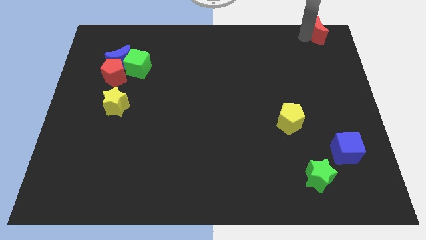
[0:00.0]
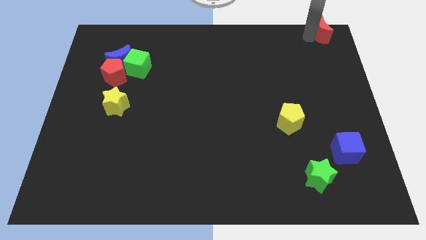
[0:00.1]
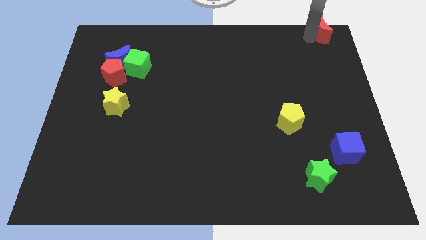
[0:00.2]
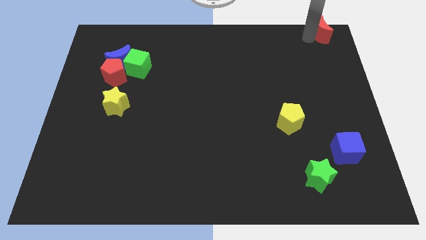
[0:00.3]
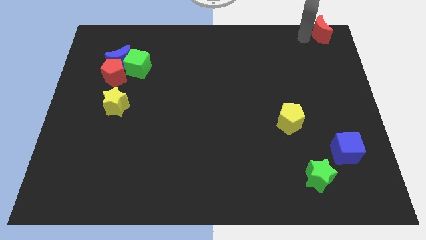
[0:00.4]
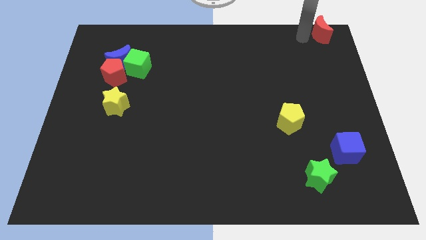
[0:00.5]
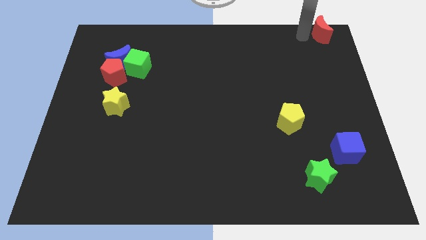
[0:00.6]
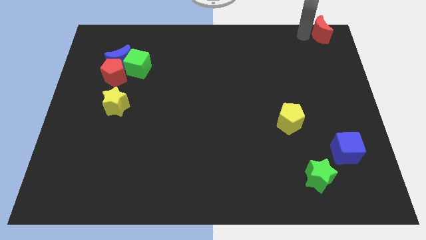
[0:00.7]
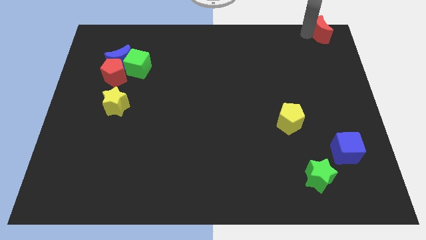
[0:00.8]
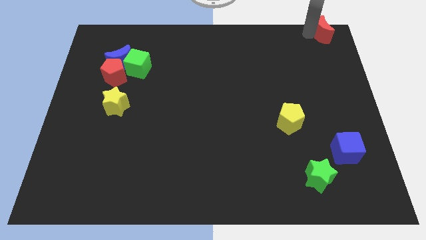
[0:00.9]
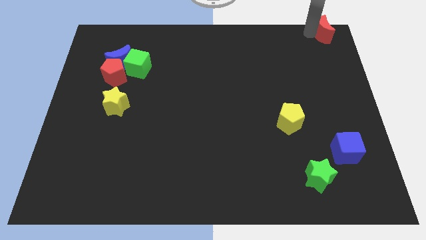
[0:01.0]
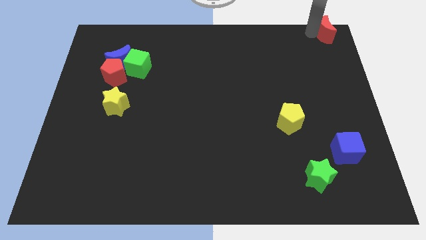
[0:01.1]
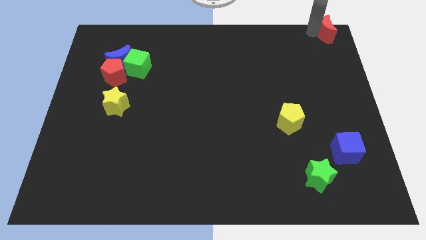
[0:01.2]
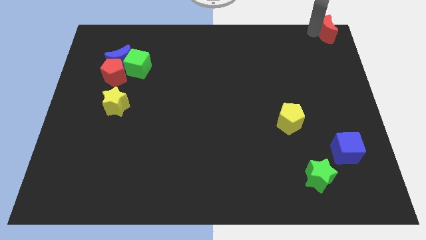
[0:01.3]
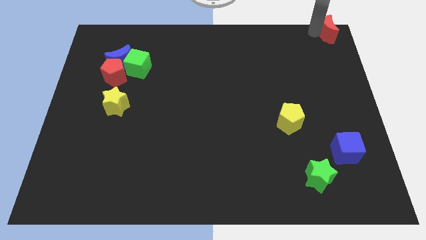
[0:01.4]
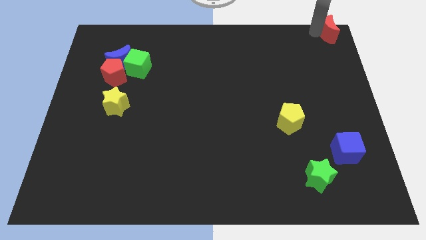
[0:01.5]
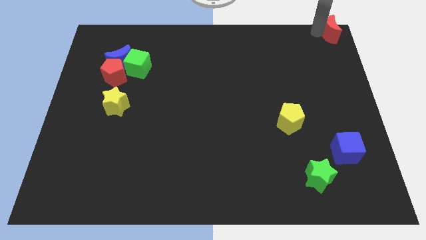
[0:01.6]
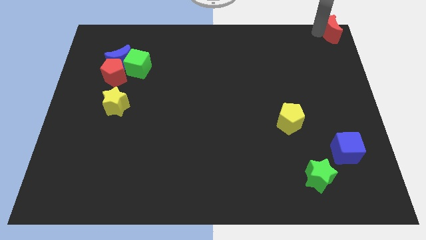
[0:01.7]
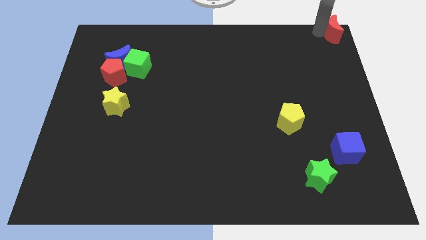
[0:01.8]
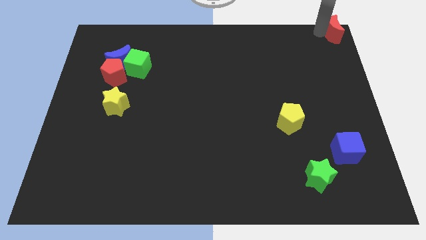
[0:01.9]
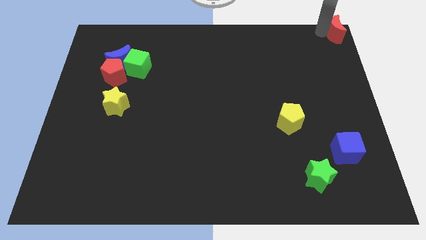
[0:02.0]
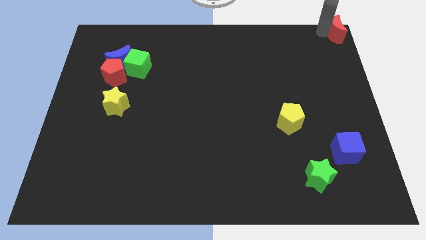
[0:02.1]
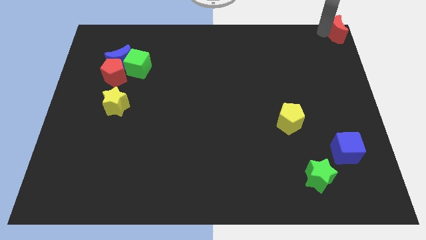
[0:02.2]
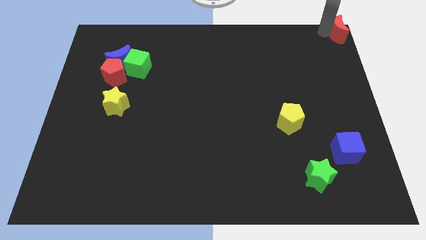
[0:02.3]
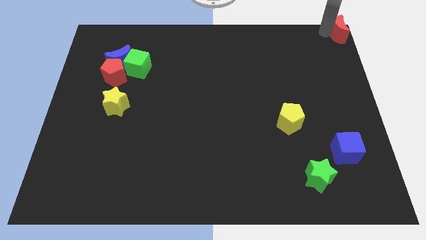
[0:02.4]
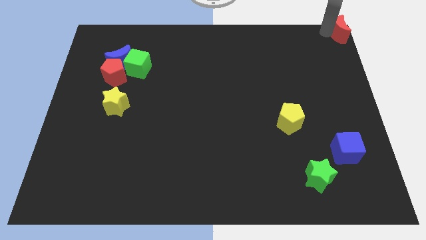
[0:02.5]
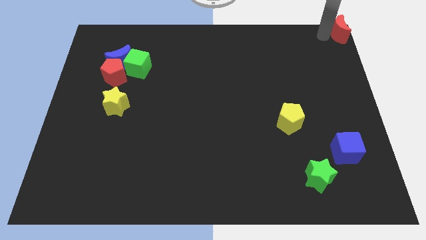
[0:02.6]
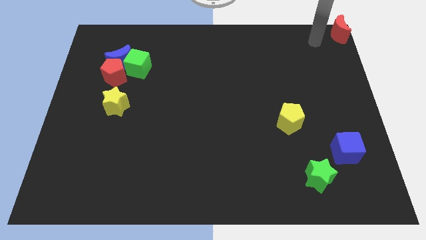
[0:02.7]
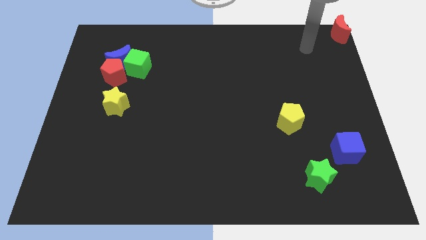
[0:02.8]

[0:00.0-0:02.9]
push the red moon to the top right corner

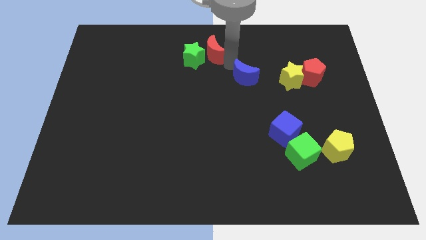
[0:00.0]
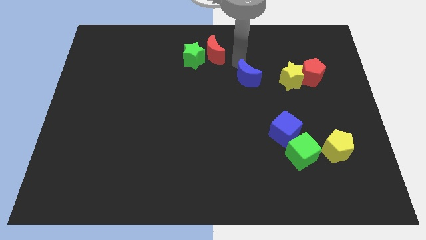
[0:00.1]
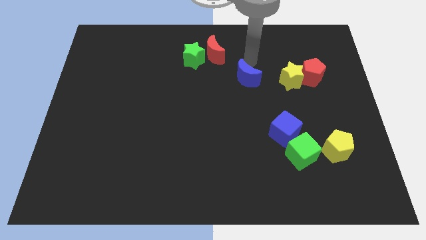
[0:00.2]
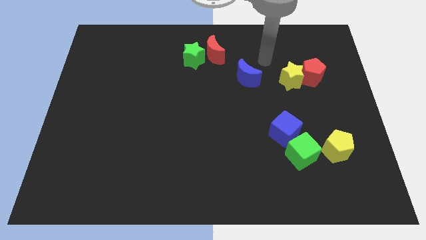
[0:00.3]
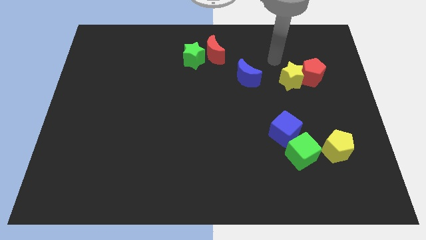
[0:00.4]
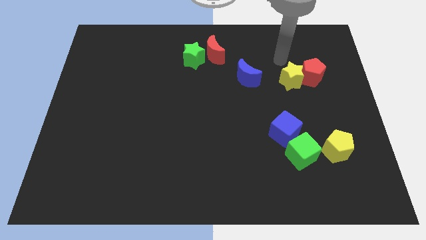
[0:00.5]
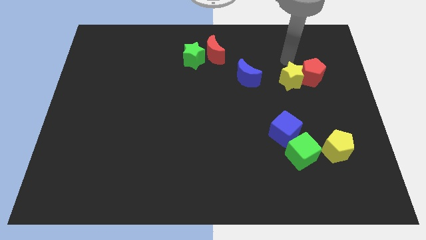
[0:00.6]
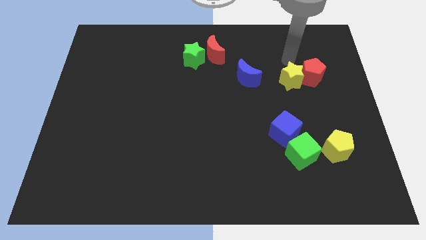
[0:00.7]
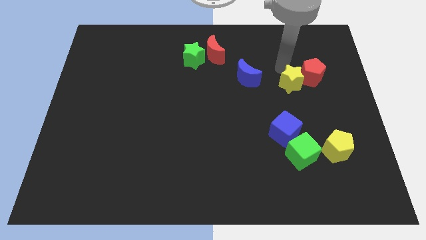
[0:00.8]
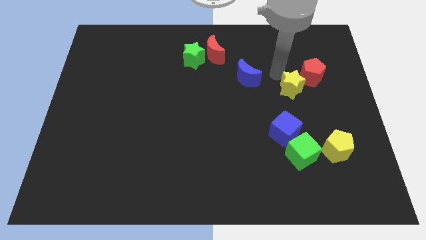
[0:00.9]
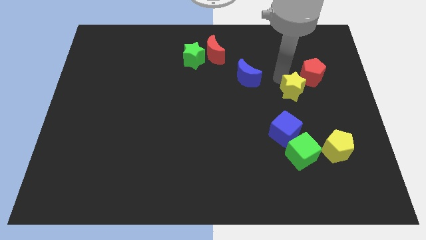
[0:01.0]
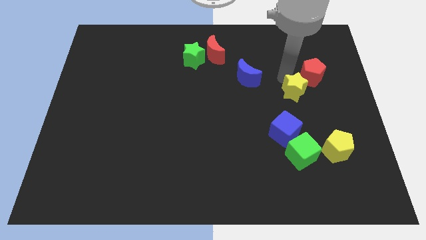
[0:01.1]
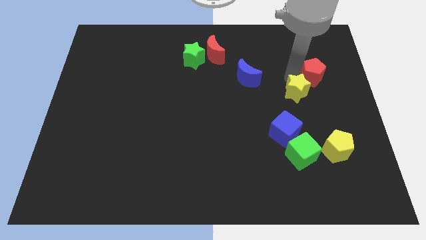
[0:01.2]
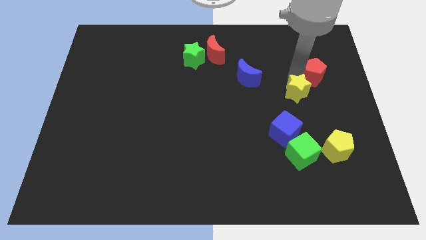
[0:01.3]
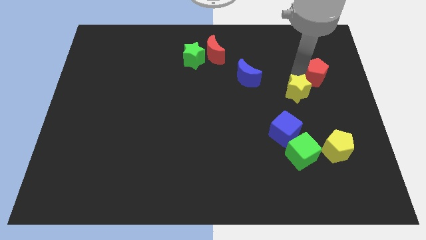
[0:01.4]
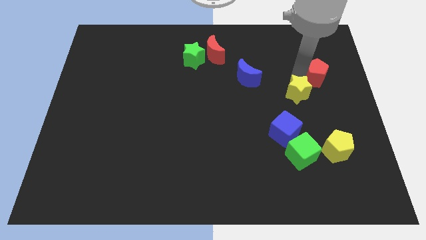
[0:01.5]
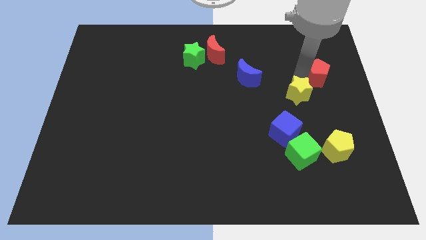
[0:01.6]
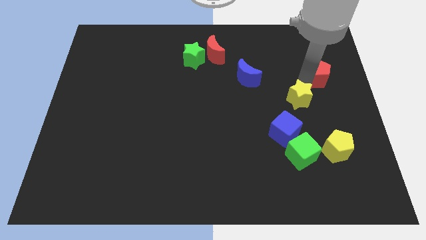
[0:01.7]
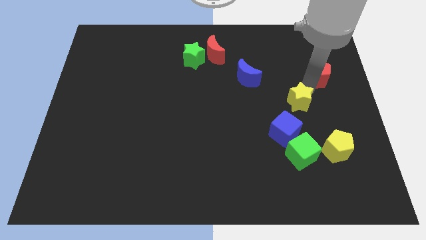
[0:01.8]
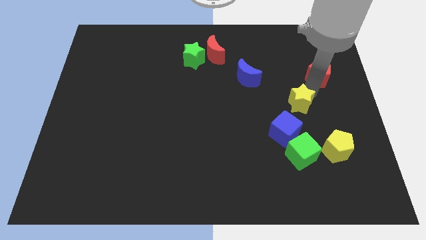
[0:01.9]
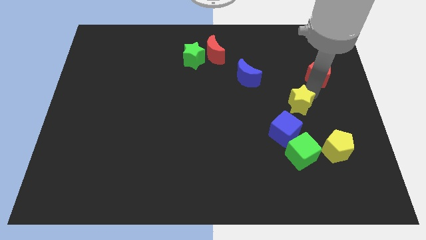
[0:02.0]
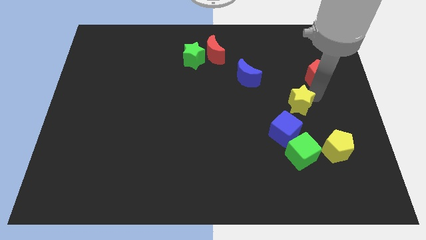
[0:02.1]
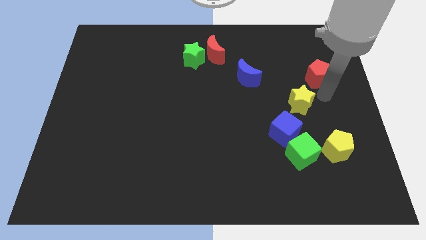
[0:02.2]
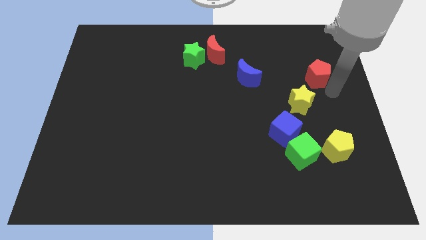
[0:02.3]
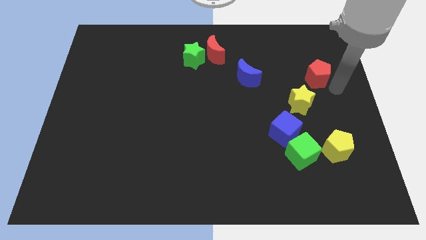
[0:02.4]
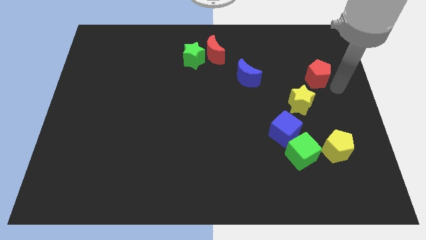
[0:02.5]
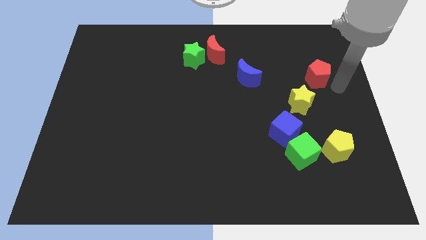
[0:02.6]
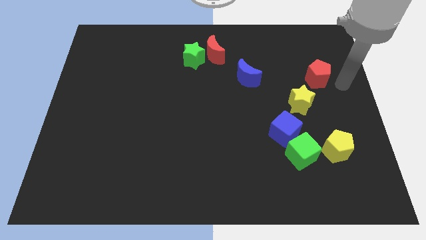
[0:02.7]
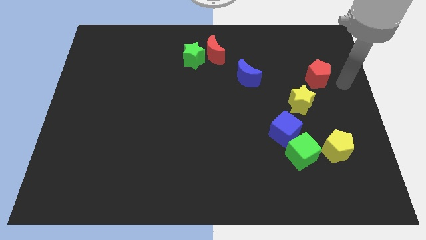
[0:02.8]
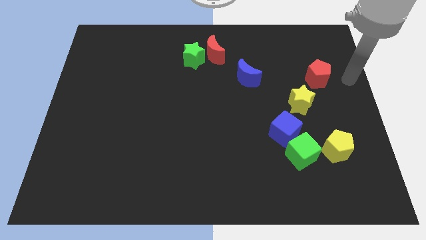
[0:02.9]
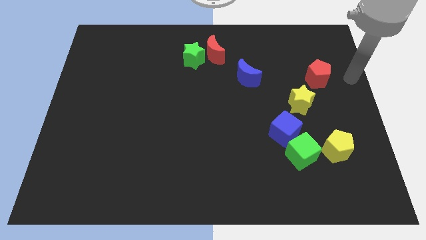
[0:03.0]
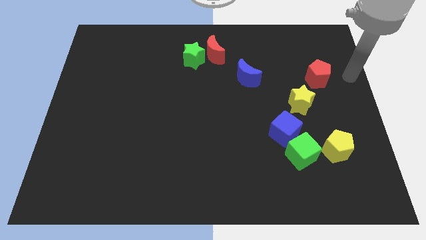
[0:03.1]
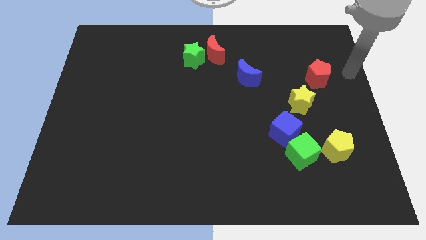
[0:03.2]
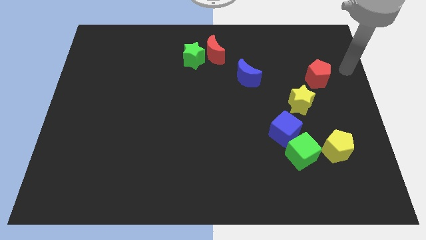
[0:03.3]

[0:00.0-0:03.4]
slightly touch down the yellow star

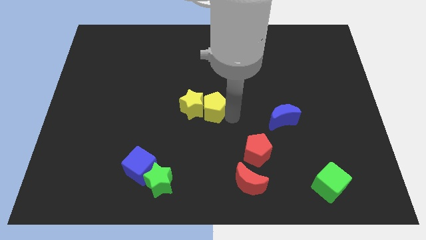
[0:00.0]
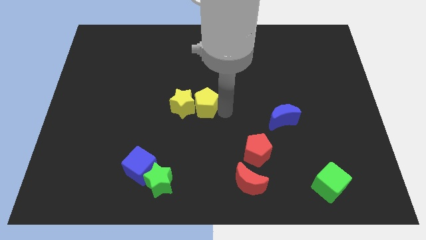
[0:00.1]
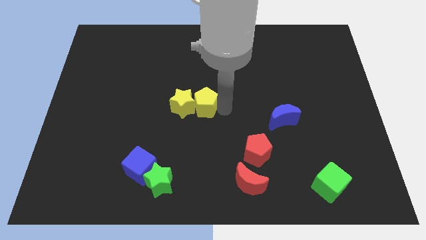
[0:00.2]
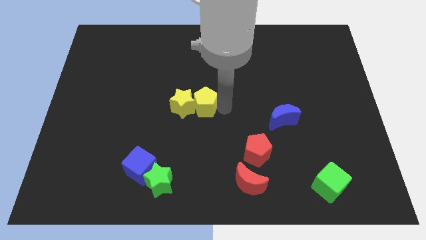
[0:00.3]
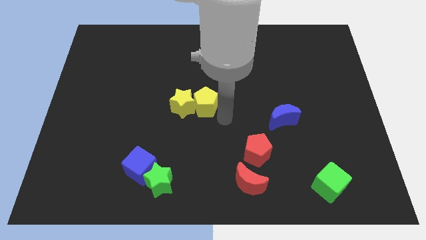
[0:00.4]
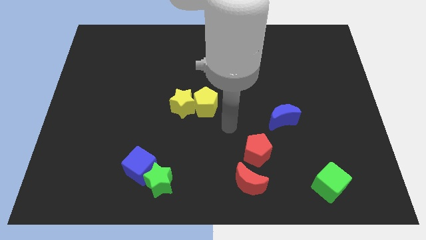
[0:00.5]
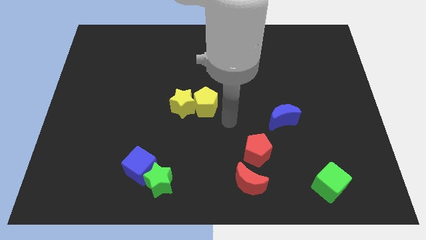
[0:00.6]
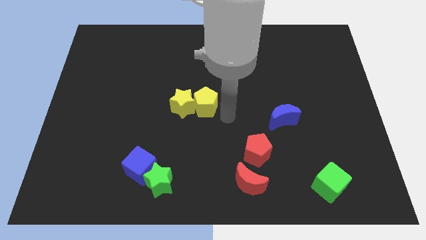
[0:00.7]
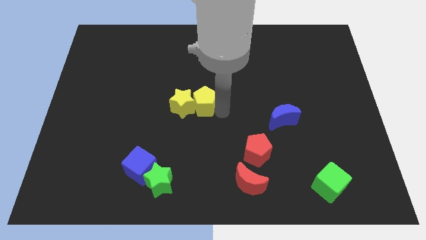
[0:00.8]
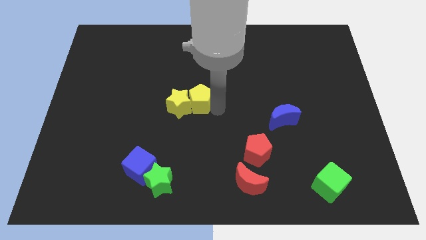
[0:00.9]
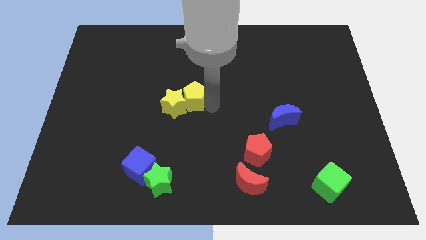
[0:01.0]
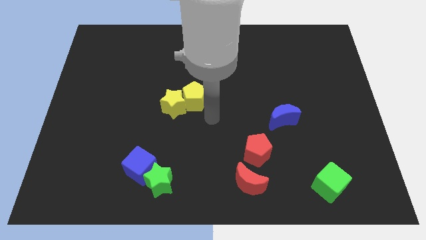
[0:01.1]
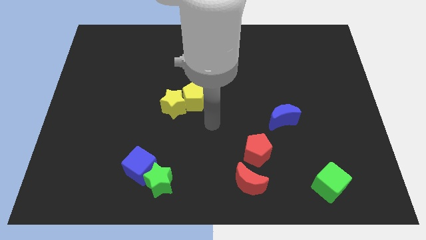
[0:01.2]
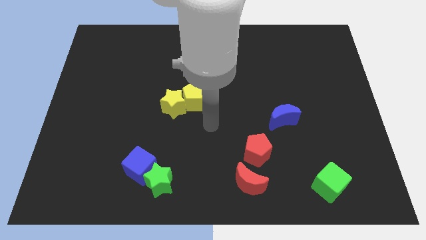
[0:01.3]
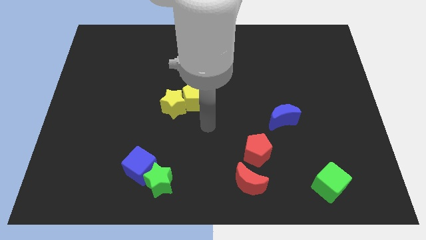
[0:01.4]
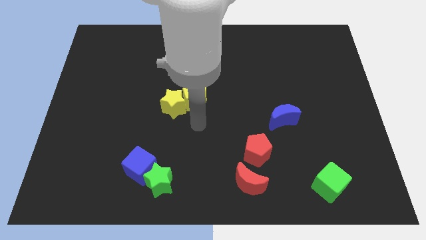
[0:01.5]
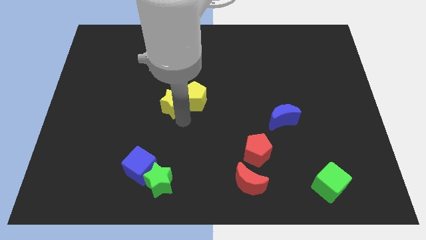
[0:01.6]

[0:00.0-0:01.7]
drag yellow pentagon and yellow star towards left

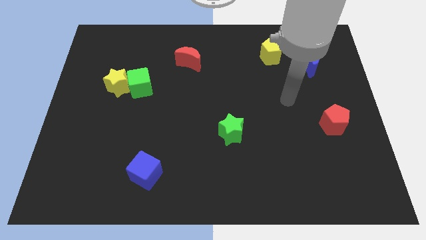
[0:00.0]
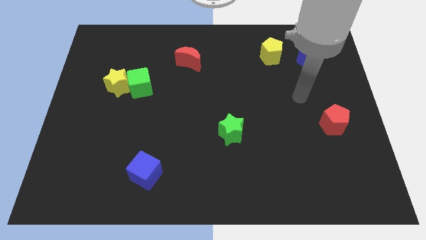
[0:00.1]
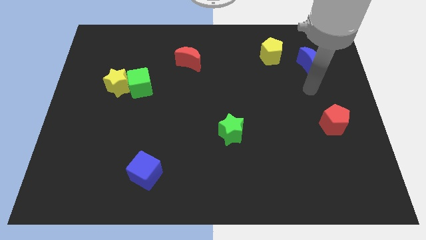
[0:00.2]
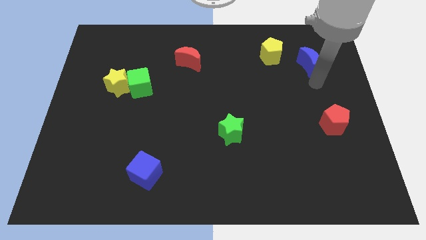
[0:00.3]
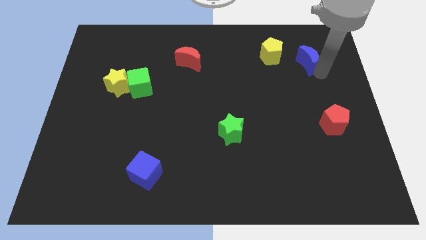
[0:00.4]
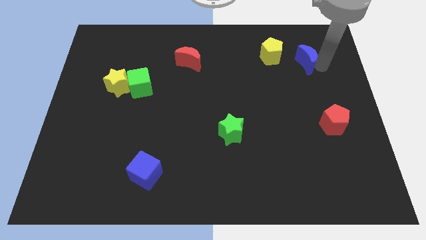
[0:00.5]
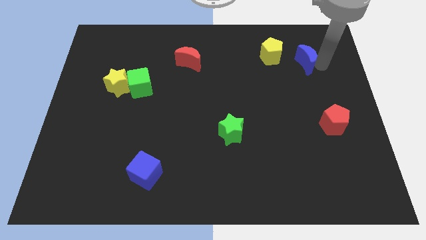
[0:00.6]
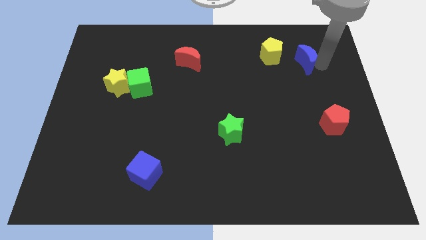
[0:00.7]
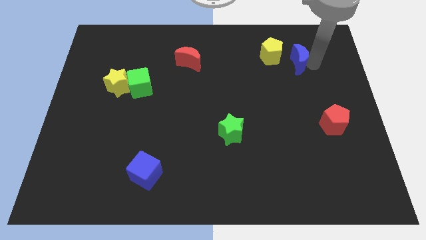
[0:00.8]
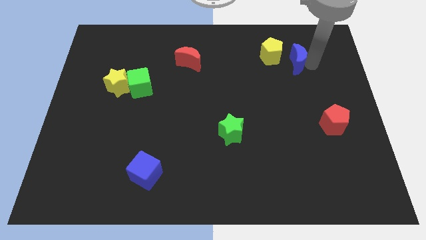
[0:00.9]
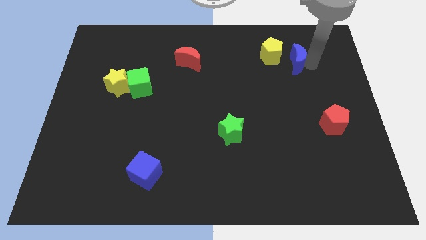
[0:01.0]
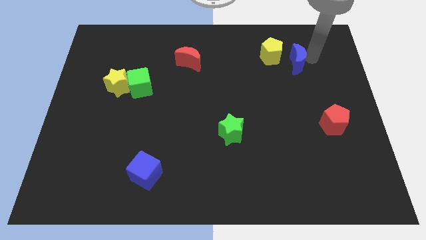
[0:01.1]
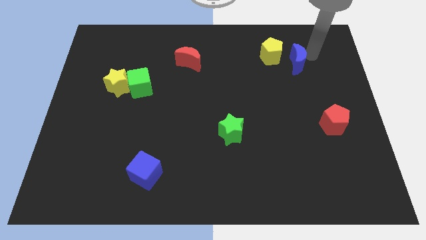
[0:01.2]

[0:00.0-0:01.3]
move the blue moon slightly left of the board
